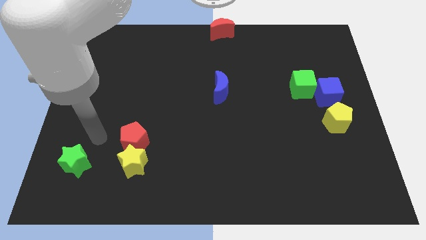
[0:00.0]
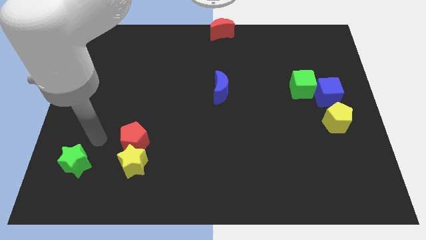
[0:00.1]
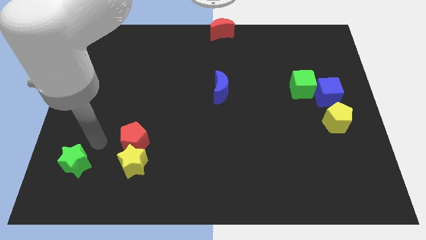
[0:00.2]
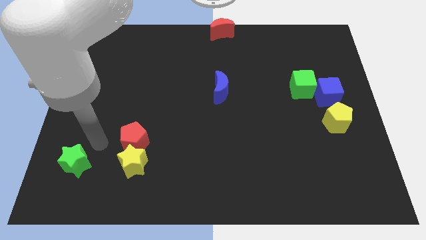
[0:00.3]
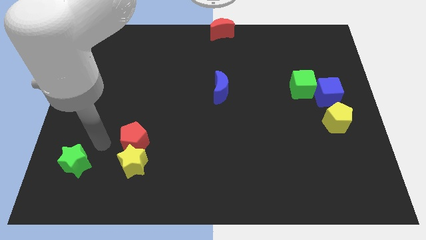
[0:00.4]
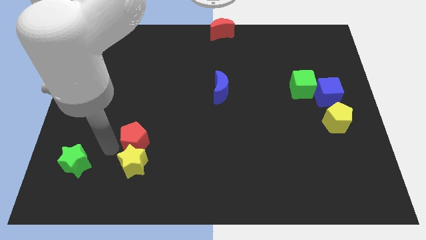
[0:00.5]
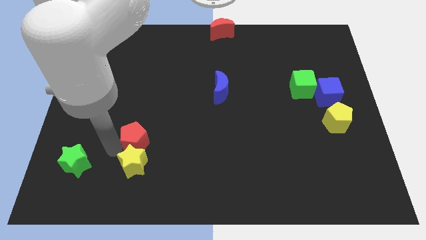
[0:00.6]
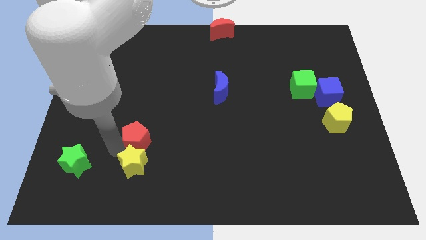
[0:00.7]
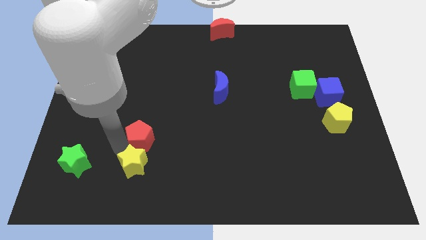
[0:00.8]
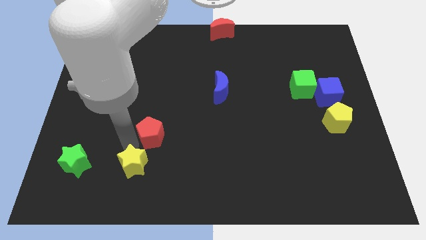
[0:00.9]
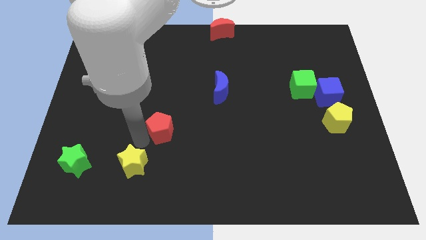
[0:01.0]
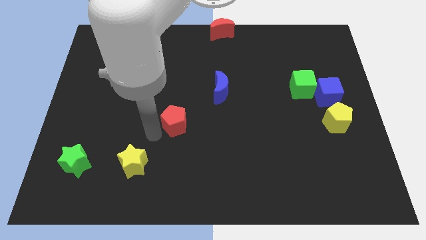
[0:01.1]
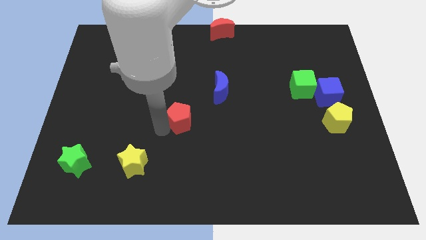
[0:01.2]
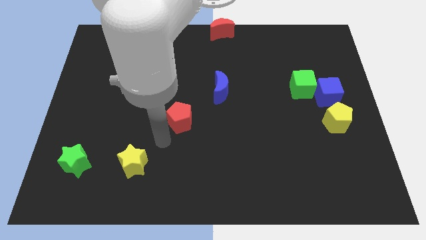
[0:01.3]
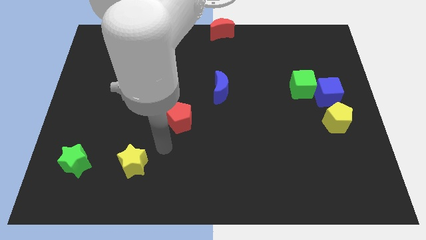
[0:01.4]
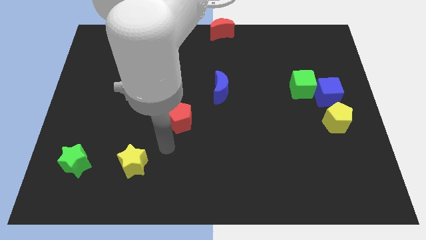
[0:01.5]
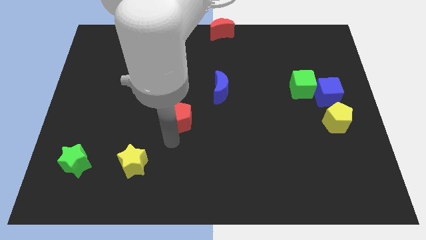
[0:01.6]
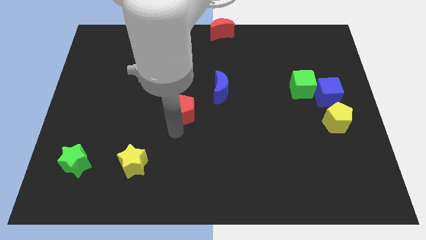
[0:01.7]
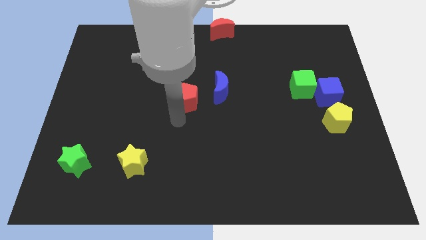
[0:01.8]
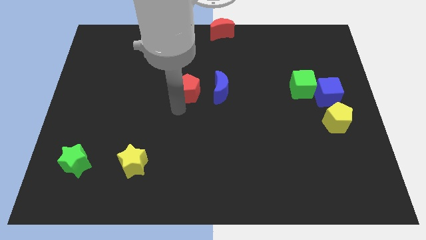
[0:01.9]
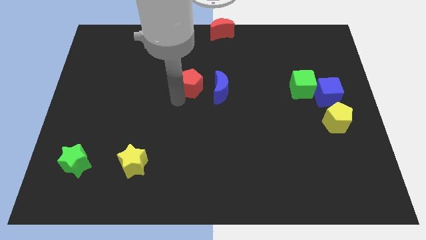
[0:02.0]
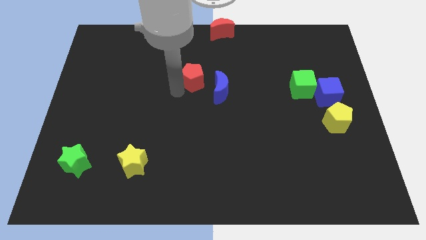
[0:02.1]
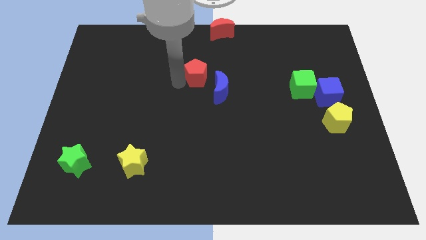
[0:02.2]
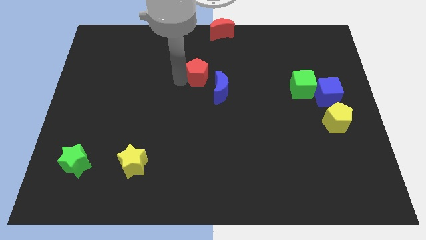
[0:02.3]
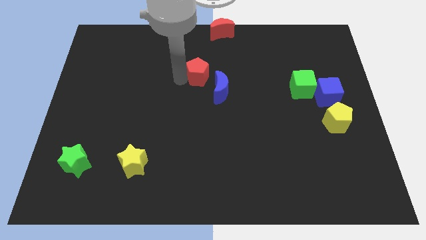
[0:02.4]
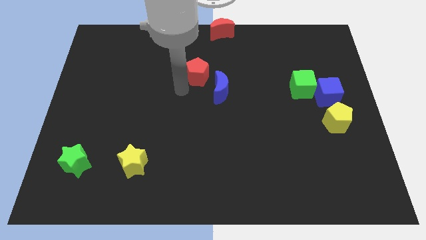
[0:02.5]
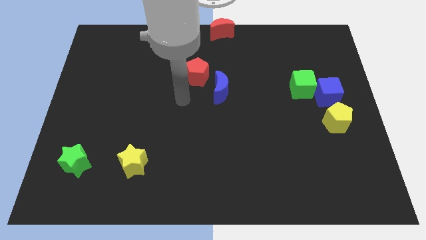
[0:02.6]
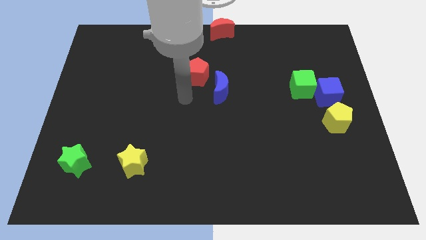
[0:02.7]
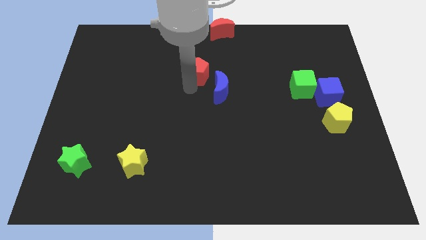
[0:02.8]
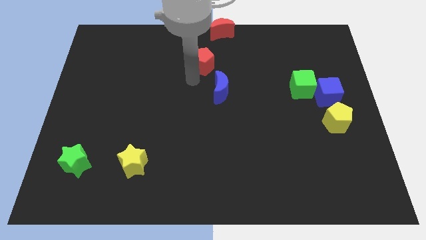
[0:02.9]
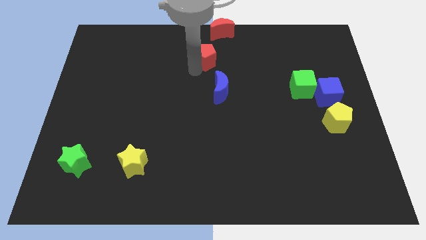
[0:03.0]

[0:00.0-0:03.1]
separate red pentagon from yellow star

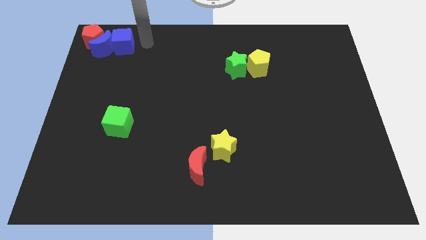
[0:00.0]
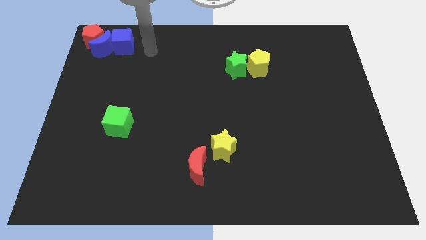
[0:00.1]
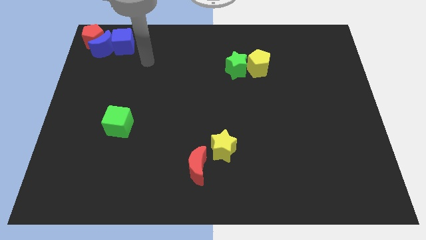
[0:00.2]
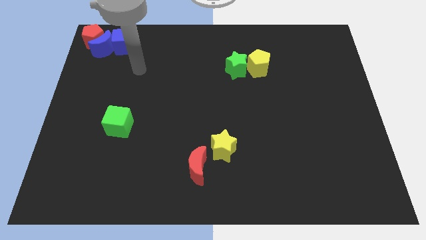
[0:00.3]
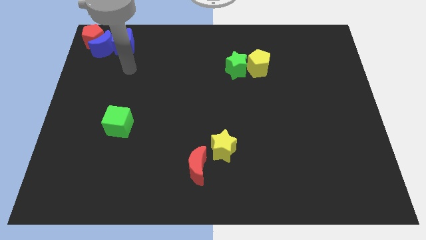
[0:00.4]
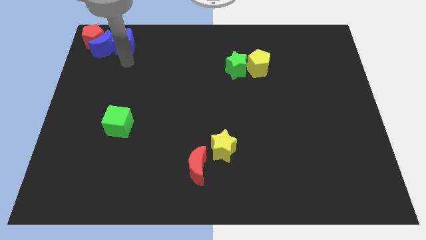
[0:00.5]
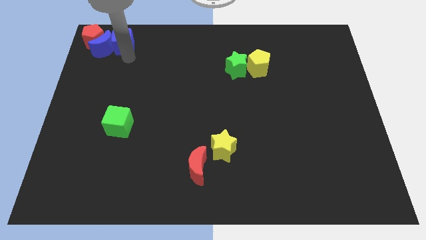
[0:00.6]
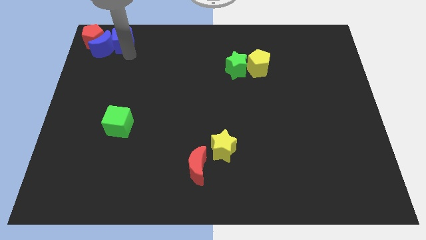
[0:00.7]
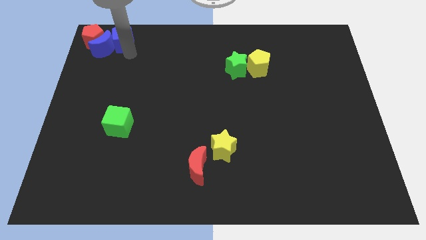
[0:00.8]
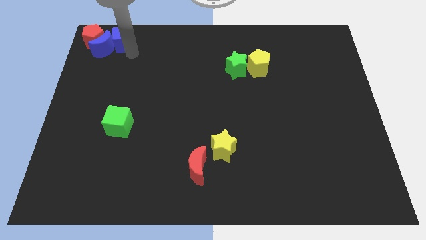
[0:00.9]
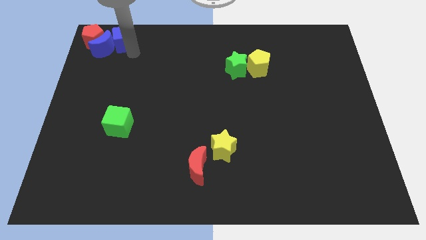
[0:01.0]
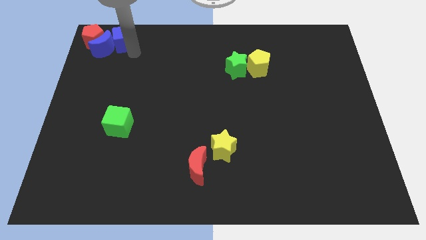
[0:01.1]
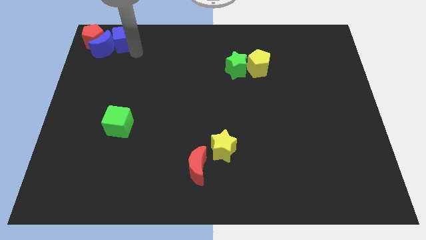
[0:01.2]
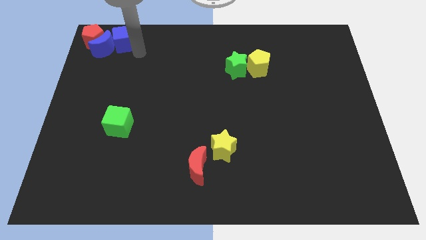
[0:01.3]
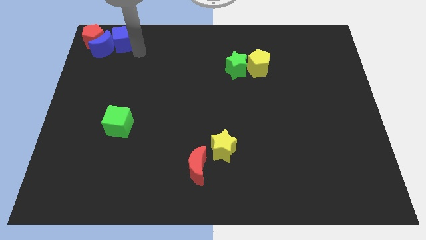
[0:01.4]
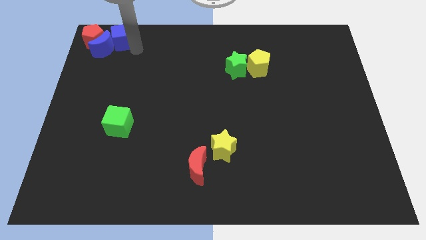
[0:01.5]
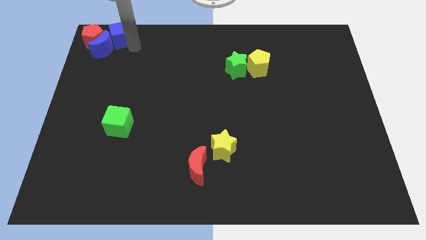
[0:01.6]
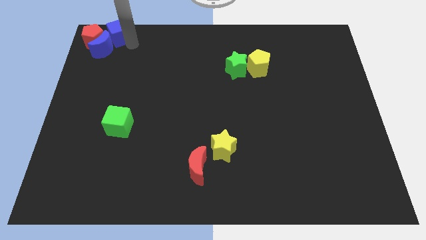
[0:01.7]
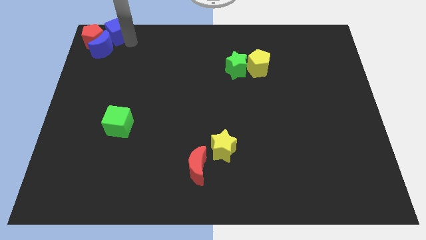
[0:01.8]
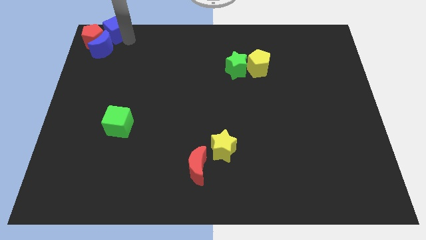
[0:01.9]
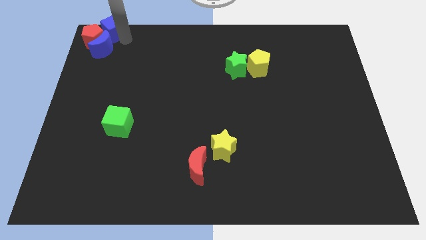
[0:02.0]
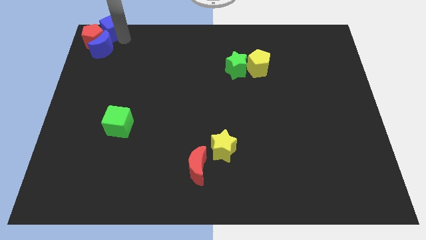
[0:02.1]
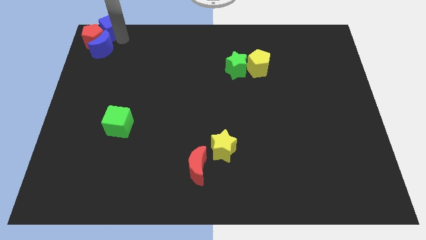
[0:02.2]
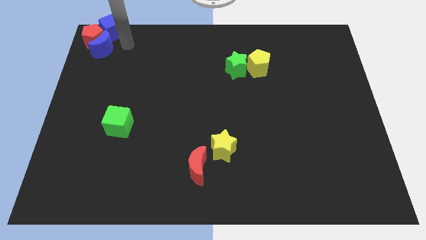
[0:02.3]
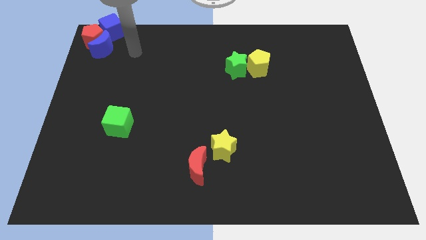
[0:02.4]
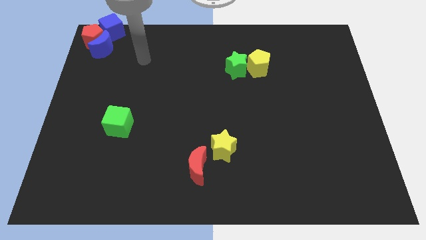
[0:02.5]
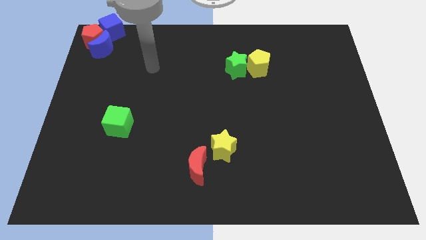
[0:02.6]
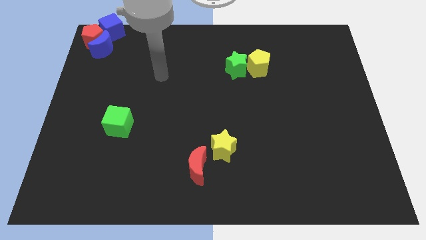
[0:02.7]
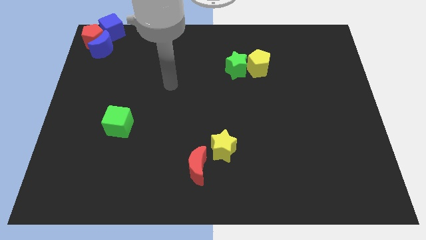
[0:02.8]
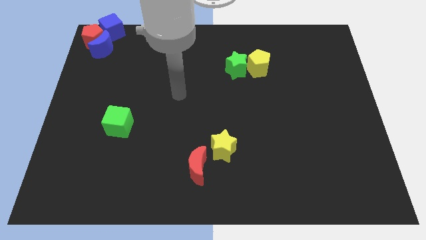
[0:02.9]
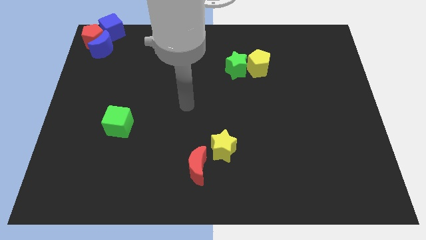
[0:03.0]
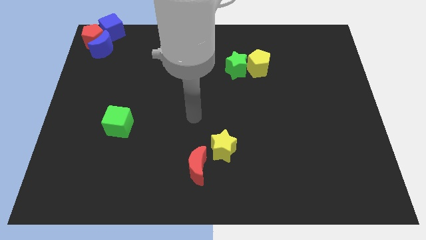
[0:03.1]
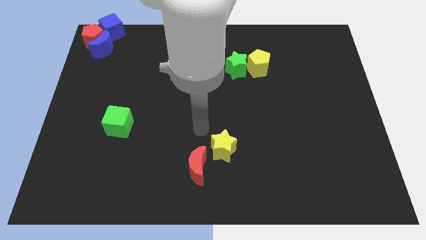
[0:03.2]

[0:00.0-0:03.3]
place the blue cube diagonal above the red pentagon at the corner

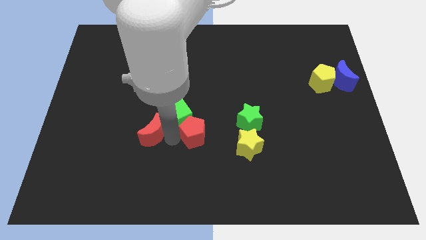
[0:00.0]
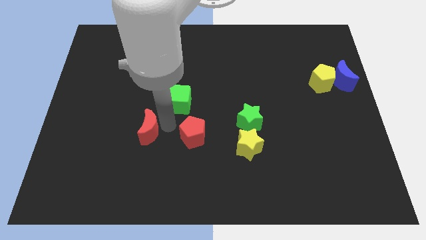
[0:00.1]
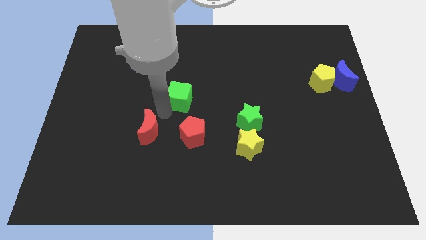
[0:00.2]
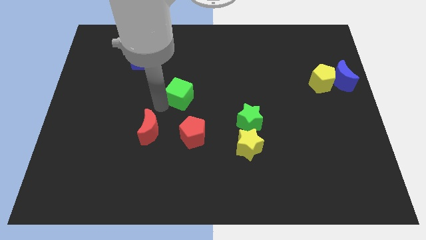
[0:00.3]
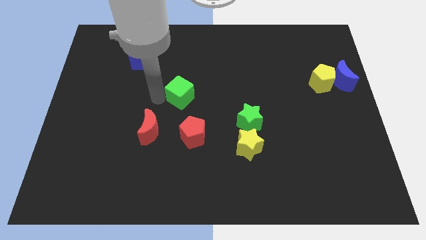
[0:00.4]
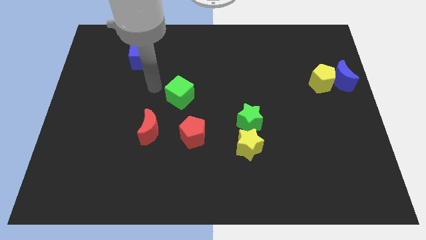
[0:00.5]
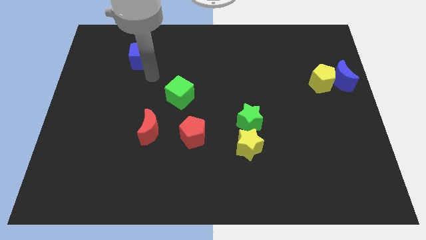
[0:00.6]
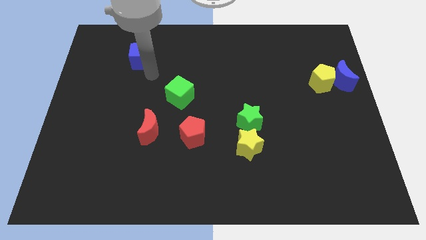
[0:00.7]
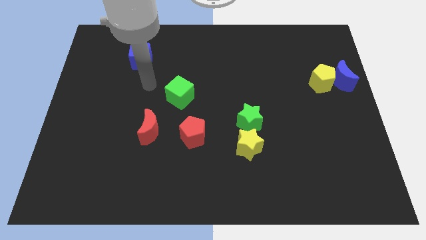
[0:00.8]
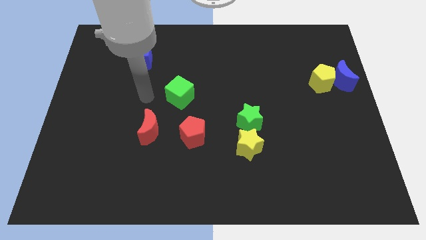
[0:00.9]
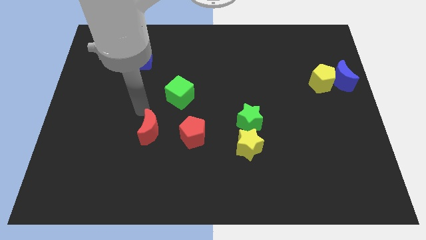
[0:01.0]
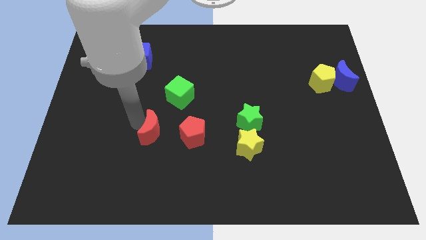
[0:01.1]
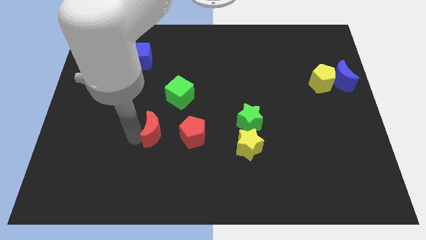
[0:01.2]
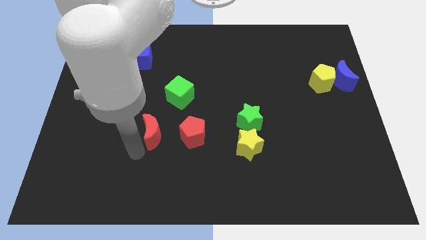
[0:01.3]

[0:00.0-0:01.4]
separate the green cube from the red pentagon

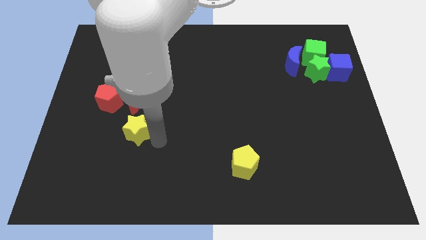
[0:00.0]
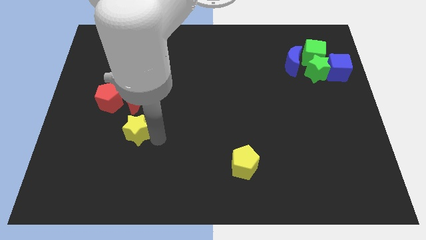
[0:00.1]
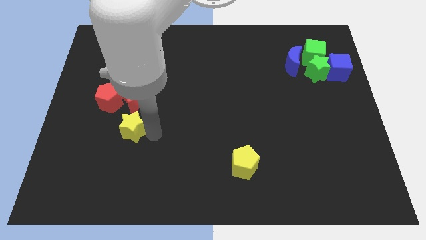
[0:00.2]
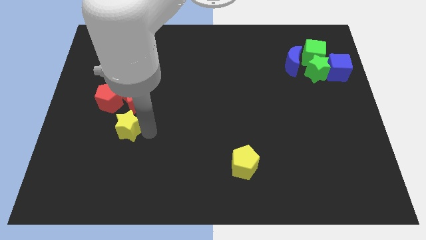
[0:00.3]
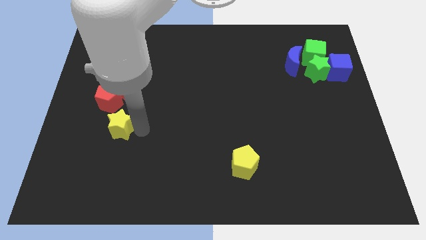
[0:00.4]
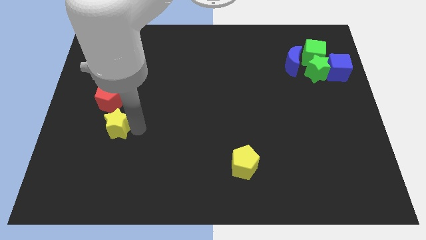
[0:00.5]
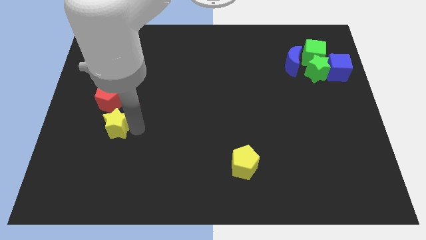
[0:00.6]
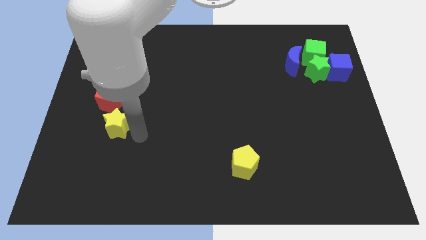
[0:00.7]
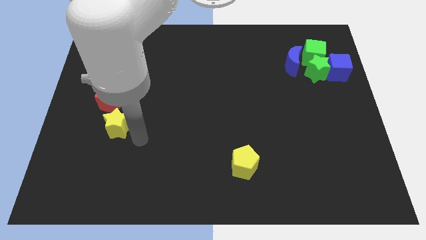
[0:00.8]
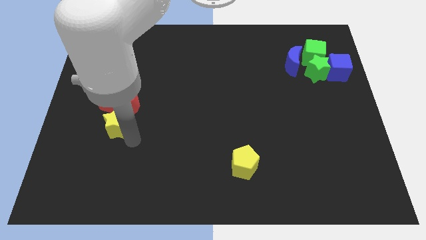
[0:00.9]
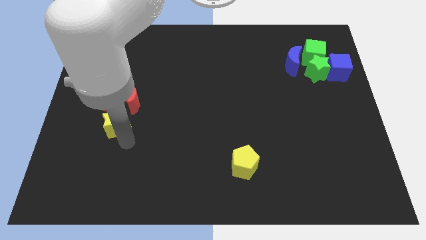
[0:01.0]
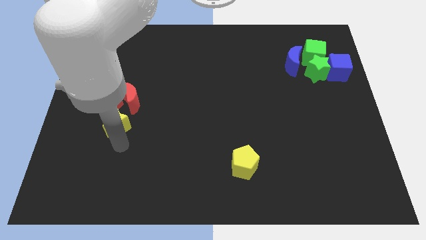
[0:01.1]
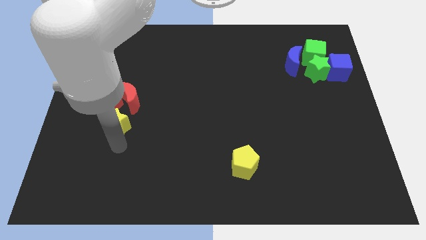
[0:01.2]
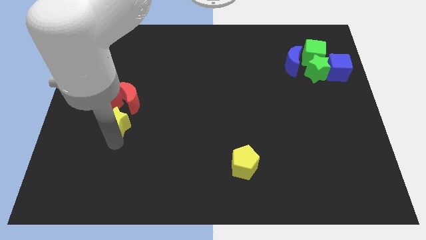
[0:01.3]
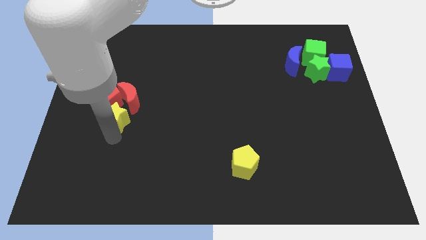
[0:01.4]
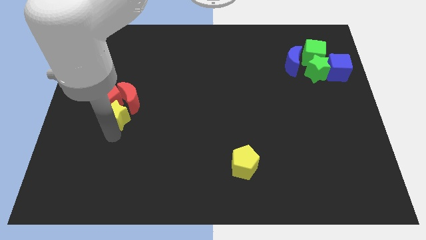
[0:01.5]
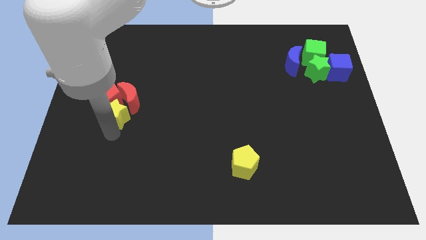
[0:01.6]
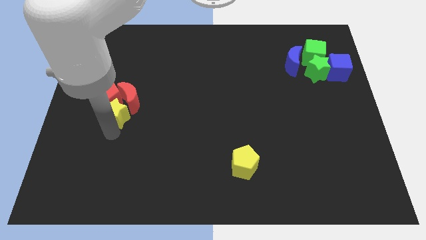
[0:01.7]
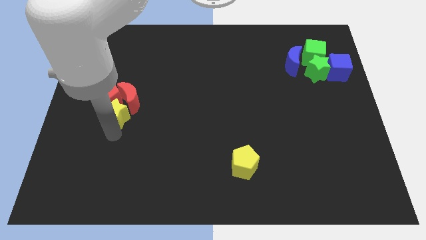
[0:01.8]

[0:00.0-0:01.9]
place the yellow star below the red blocks
